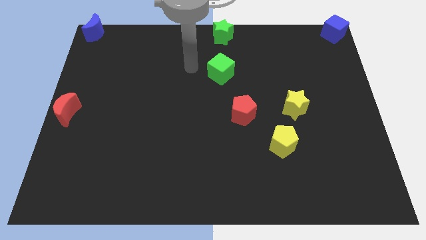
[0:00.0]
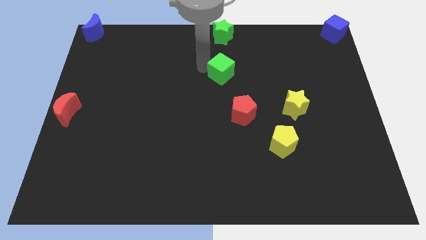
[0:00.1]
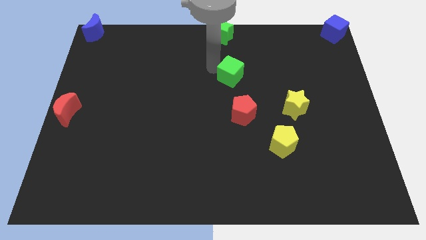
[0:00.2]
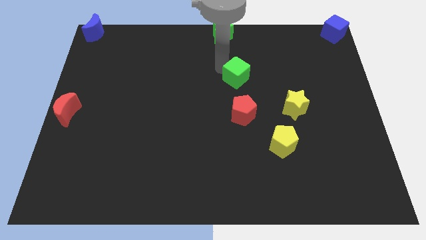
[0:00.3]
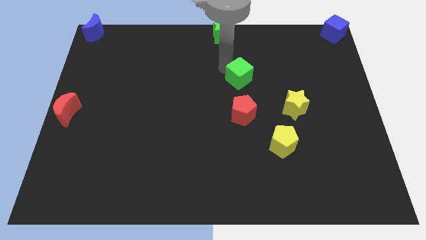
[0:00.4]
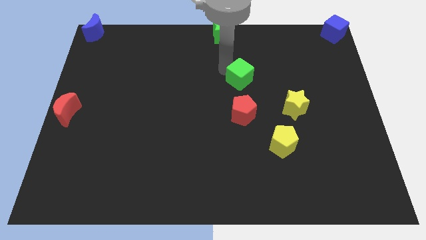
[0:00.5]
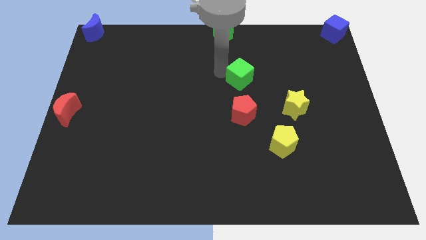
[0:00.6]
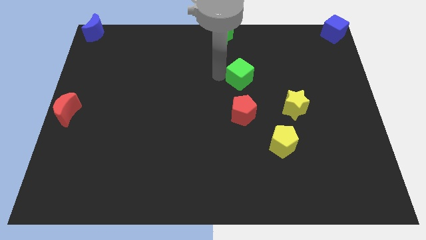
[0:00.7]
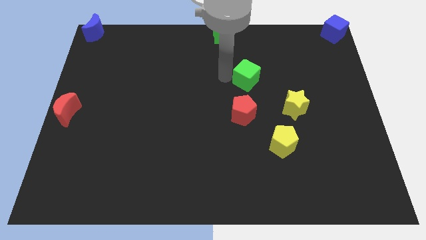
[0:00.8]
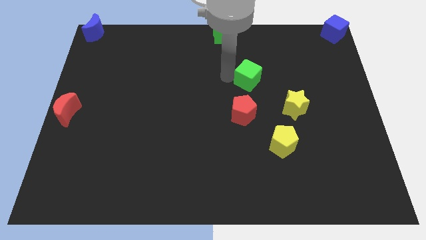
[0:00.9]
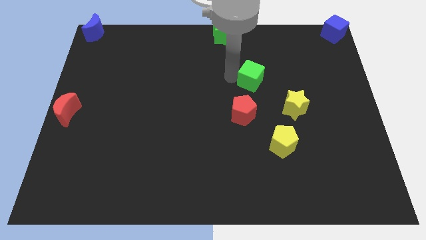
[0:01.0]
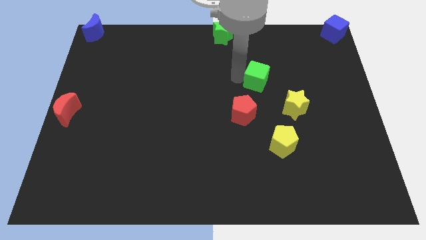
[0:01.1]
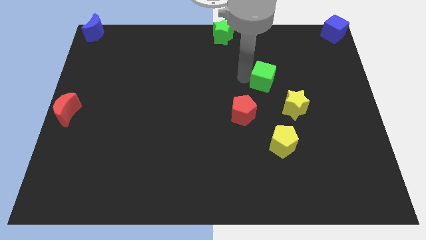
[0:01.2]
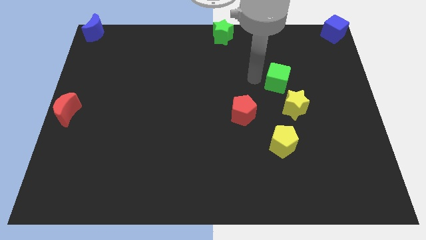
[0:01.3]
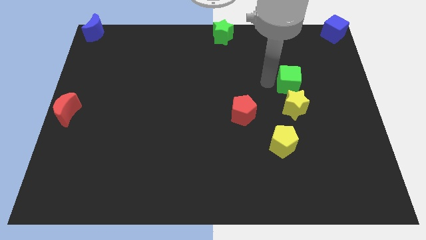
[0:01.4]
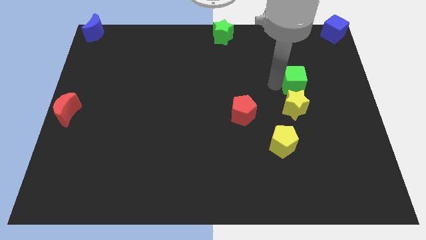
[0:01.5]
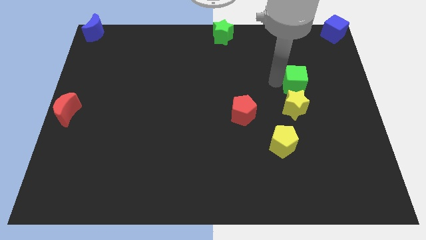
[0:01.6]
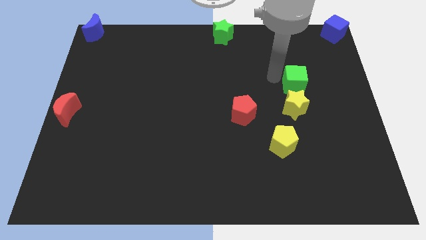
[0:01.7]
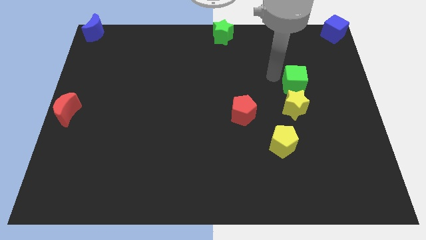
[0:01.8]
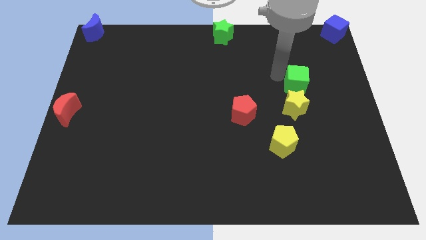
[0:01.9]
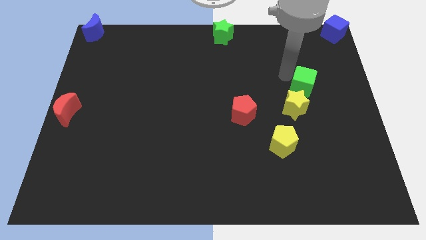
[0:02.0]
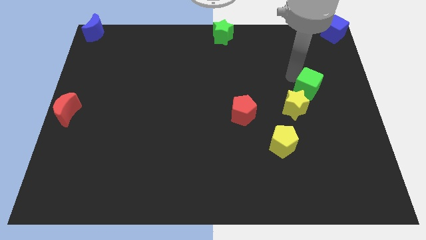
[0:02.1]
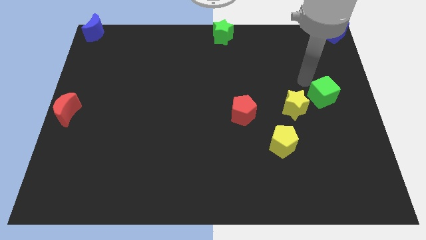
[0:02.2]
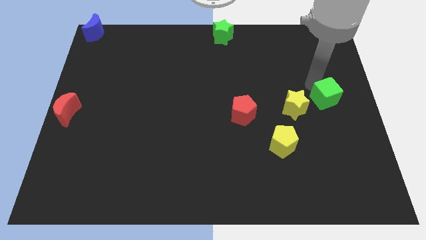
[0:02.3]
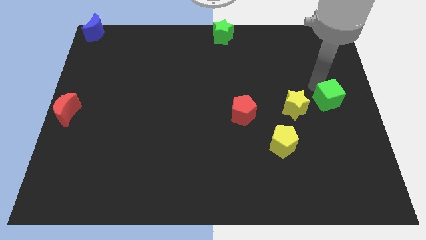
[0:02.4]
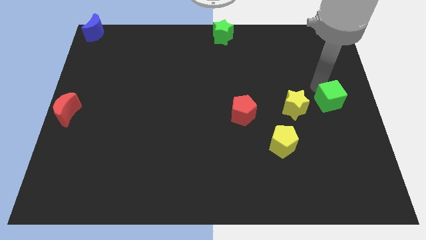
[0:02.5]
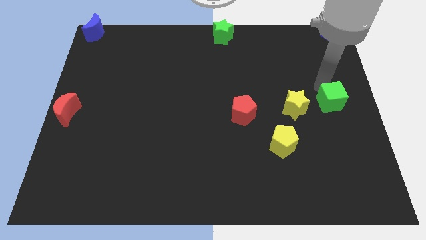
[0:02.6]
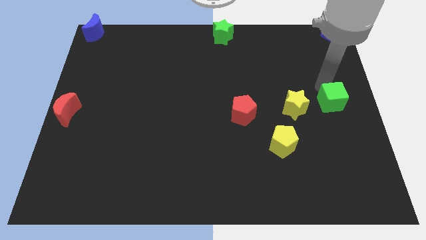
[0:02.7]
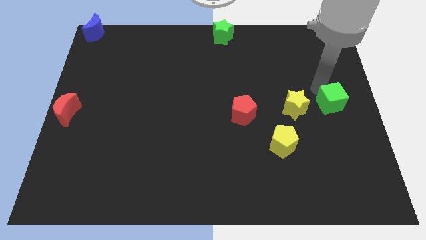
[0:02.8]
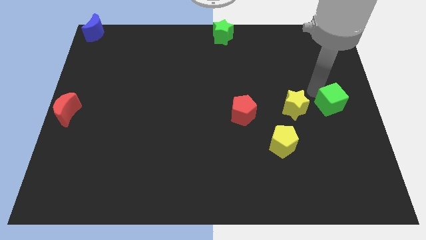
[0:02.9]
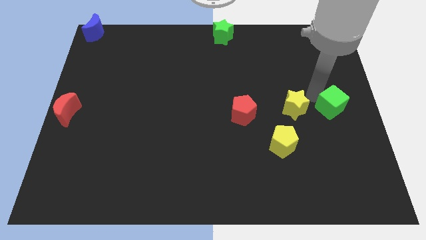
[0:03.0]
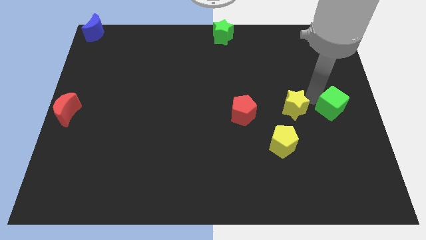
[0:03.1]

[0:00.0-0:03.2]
push the green cube to the right side of the yellow star

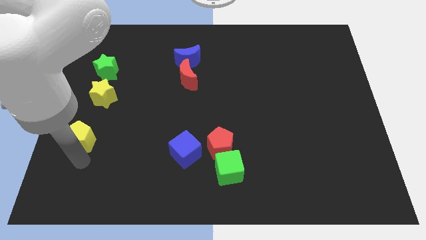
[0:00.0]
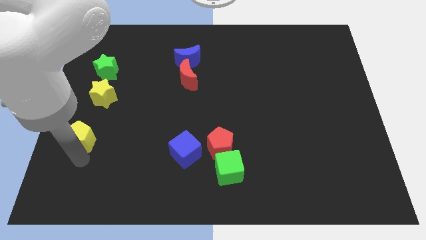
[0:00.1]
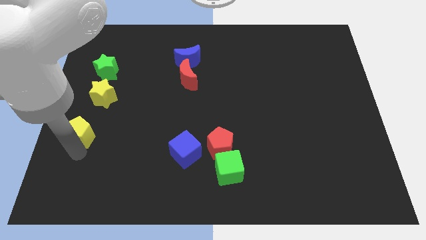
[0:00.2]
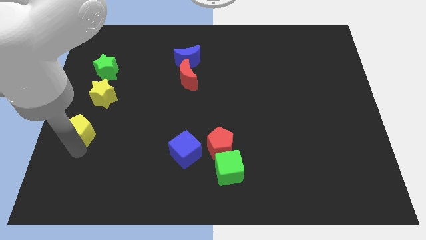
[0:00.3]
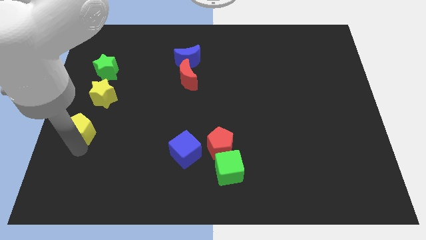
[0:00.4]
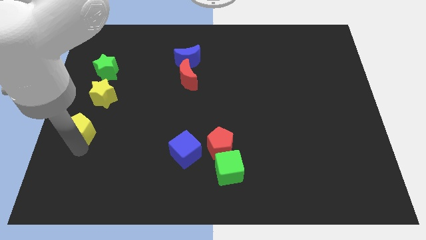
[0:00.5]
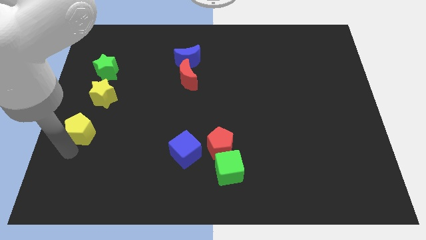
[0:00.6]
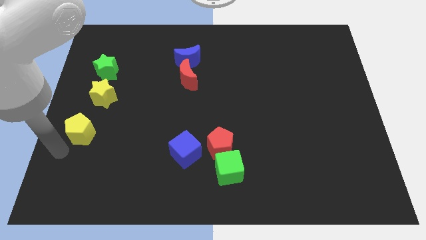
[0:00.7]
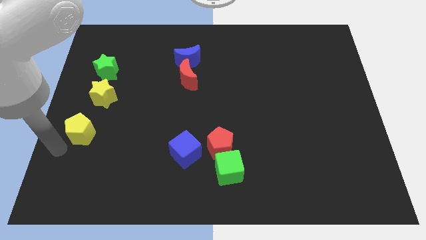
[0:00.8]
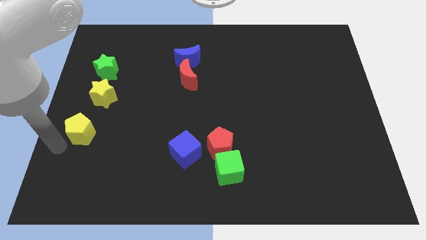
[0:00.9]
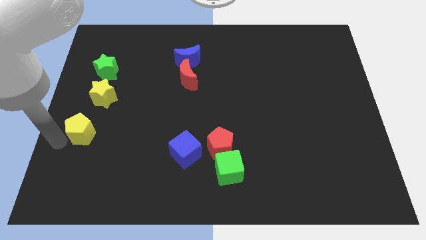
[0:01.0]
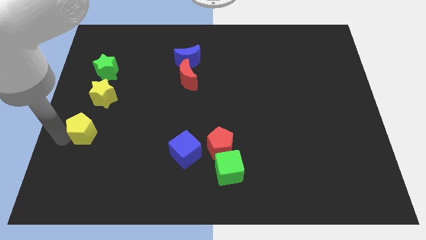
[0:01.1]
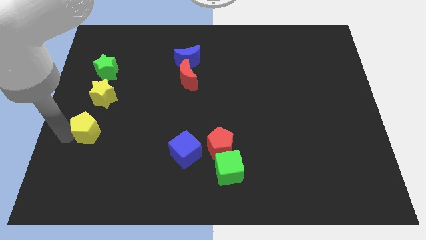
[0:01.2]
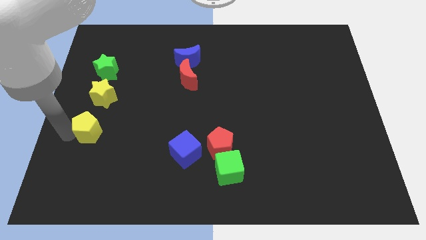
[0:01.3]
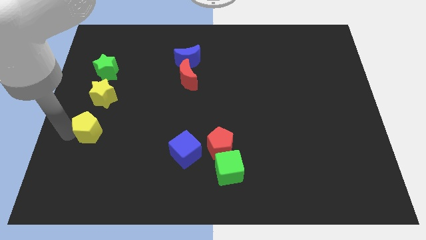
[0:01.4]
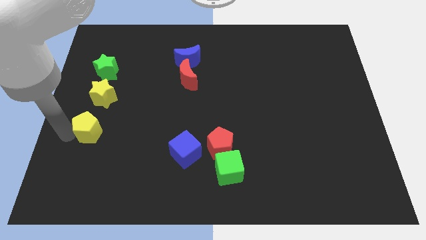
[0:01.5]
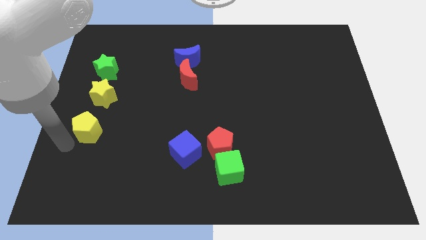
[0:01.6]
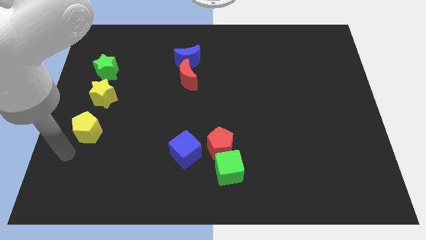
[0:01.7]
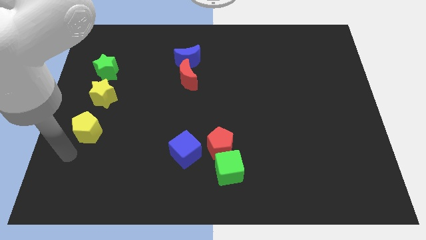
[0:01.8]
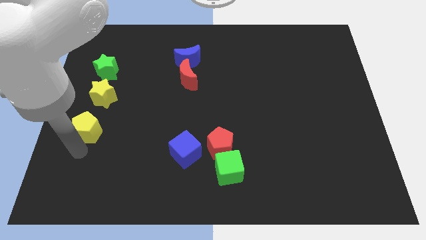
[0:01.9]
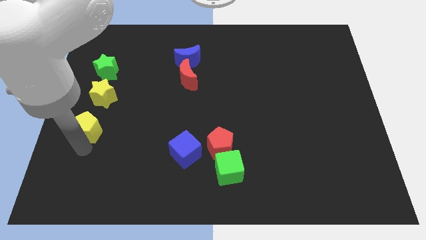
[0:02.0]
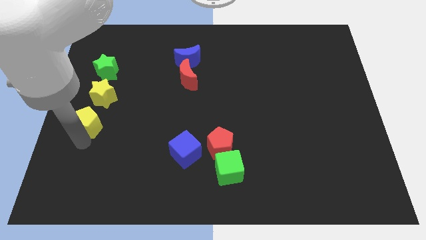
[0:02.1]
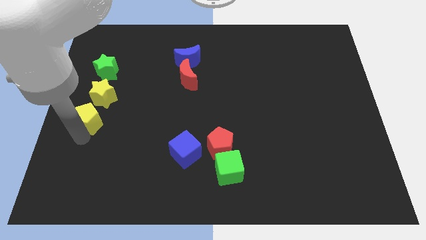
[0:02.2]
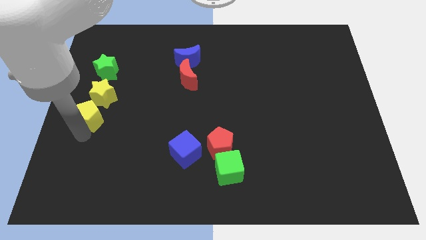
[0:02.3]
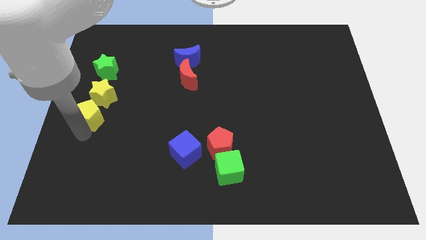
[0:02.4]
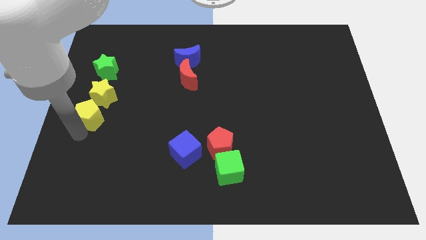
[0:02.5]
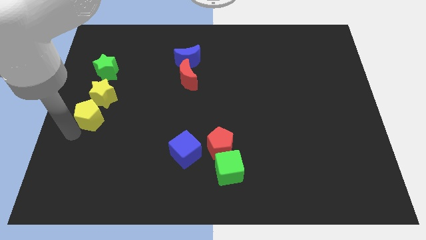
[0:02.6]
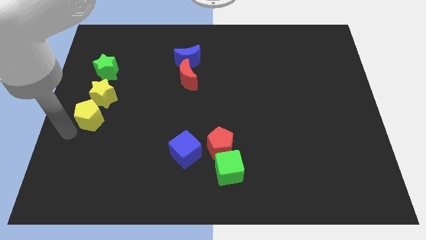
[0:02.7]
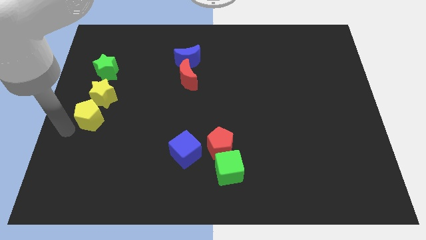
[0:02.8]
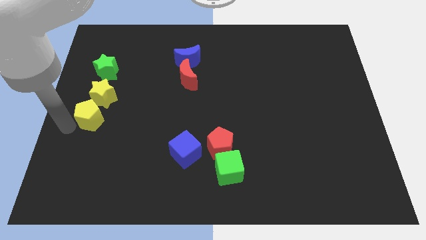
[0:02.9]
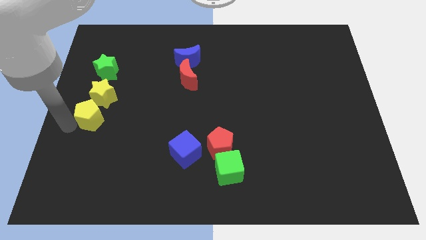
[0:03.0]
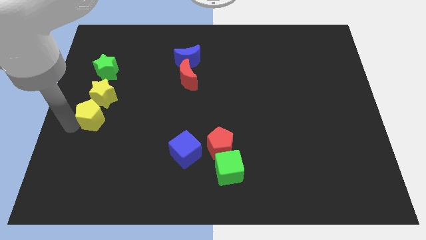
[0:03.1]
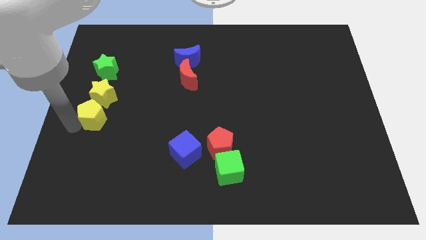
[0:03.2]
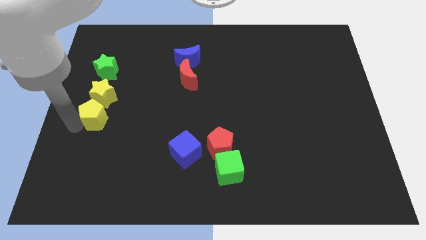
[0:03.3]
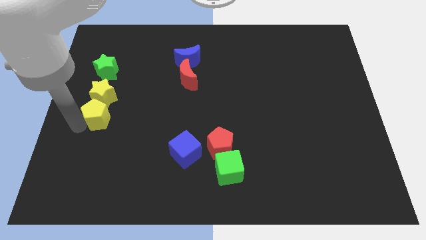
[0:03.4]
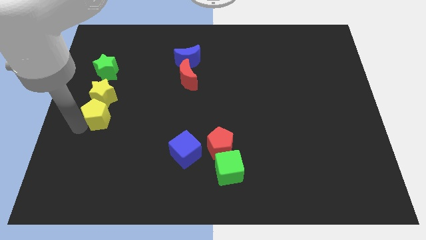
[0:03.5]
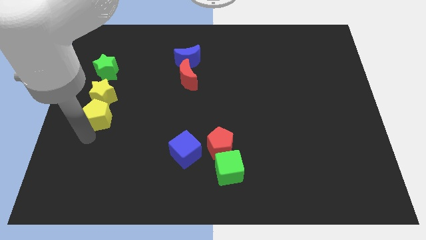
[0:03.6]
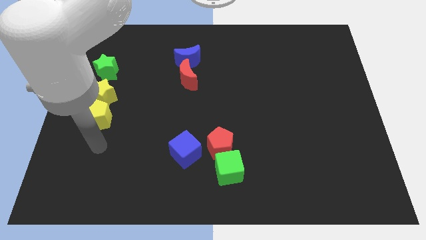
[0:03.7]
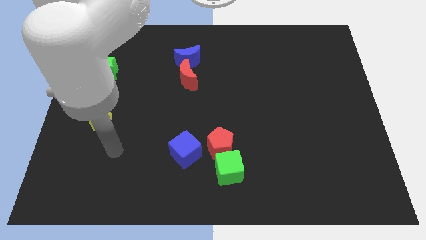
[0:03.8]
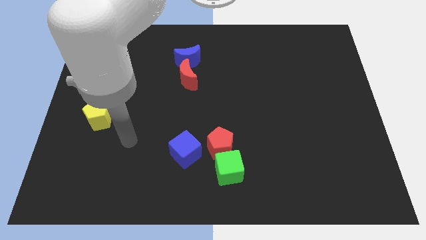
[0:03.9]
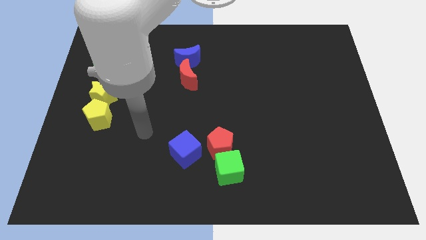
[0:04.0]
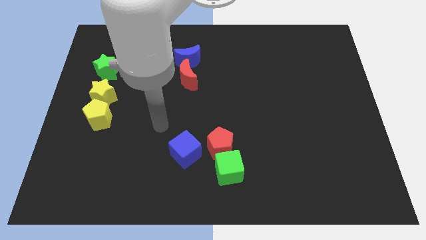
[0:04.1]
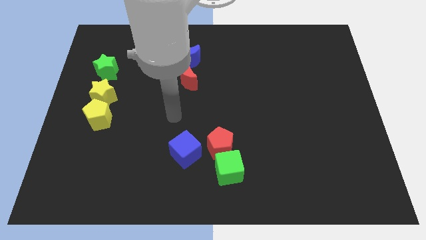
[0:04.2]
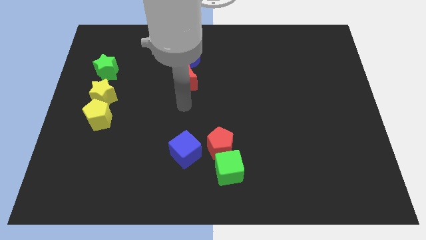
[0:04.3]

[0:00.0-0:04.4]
place the yellow pentagon below the yellow star

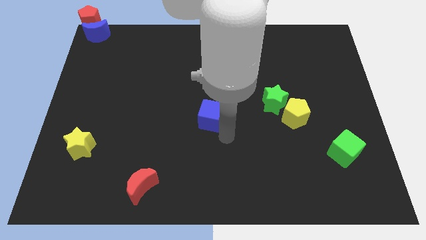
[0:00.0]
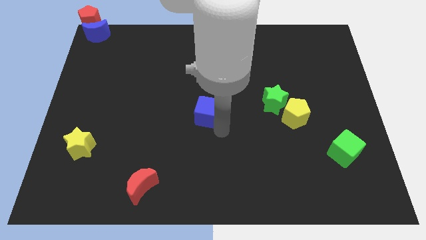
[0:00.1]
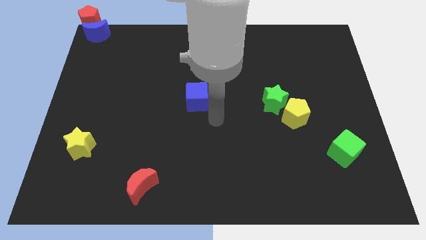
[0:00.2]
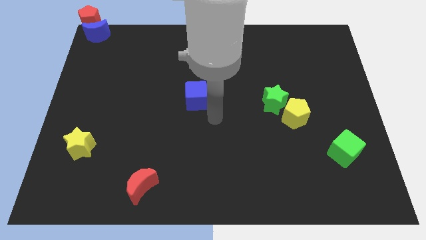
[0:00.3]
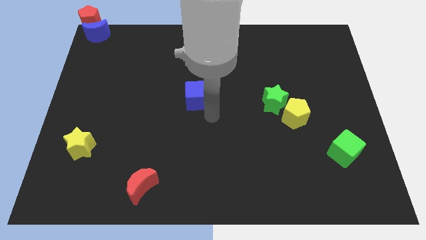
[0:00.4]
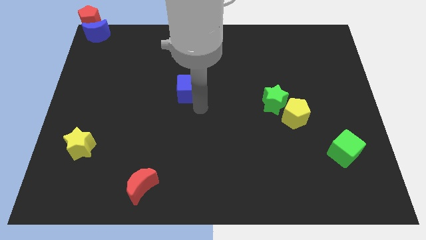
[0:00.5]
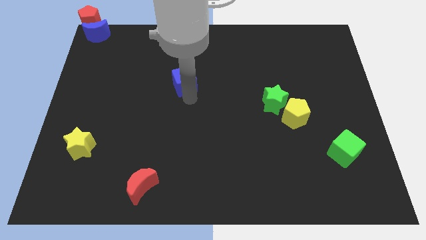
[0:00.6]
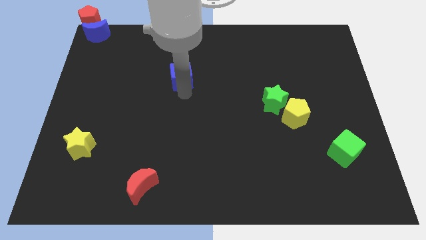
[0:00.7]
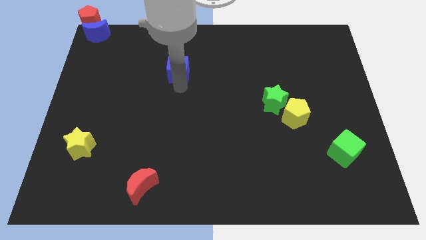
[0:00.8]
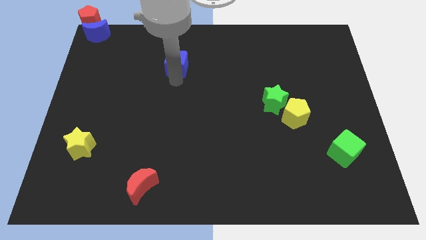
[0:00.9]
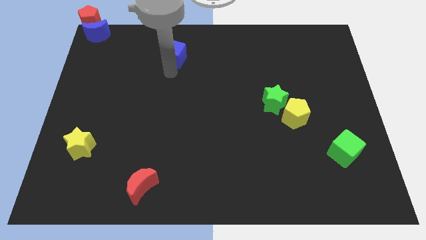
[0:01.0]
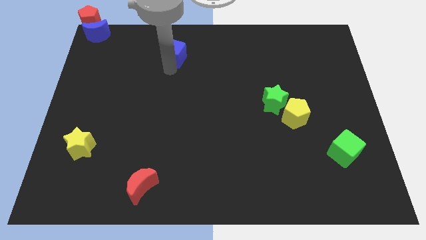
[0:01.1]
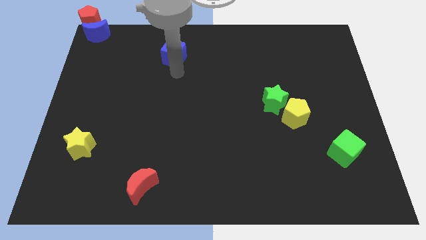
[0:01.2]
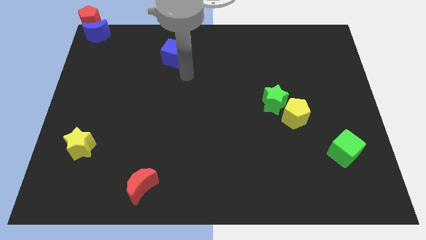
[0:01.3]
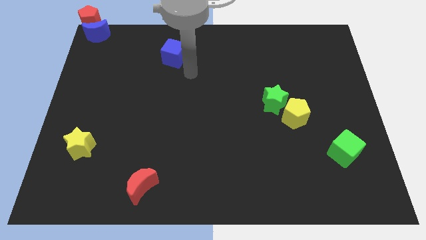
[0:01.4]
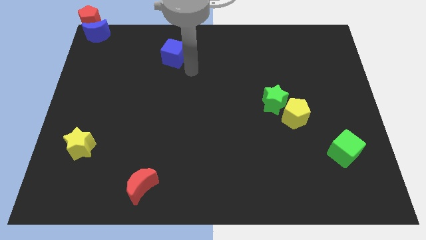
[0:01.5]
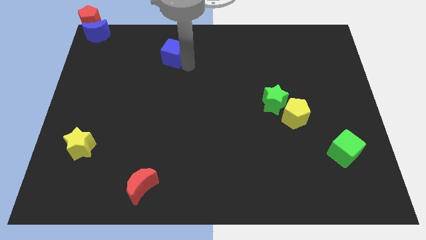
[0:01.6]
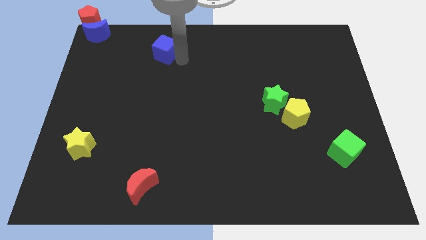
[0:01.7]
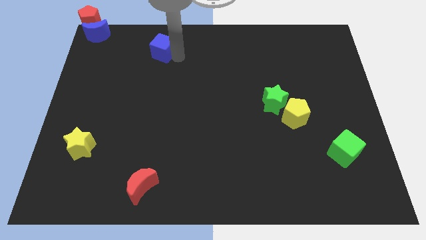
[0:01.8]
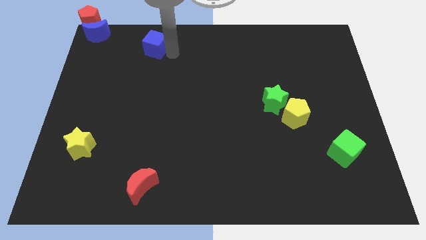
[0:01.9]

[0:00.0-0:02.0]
drag the blue cube towards the blue moon
